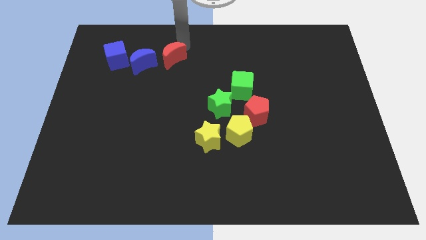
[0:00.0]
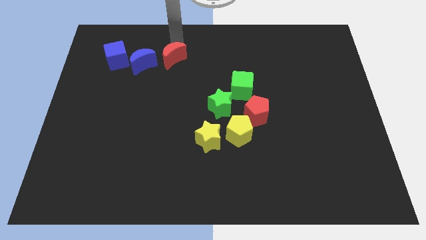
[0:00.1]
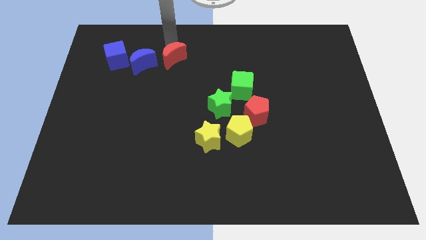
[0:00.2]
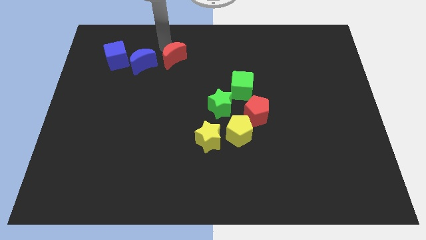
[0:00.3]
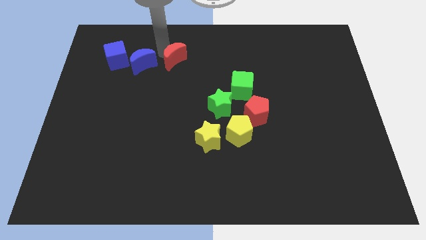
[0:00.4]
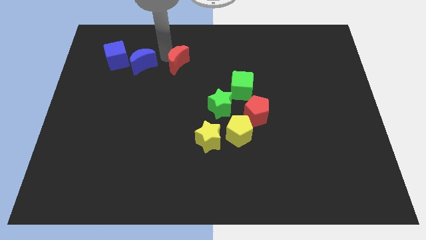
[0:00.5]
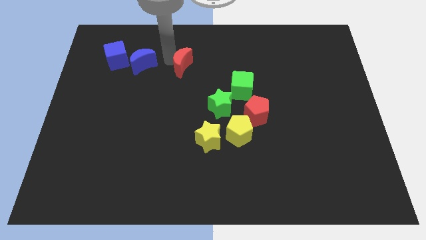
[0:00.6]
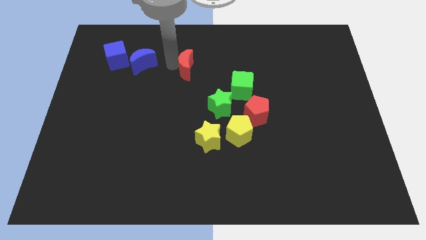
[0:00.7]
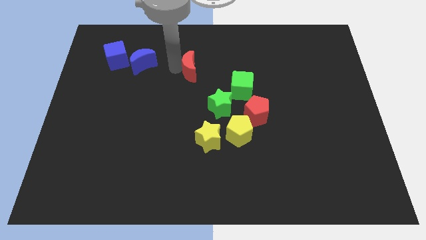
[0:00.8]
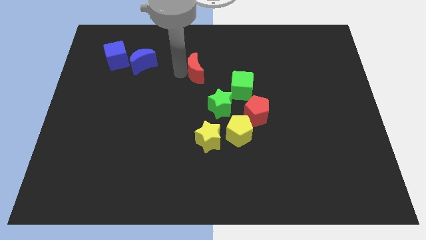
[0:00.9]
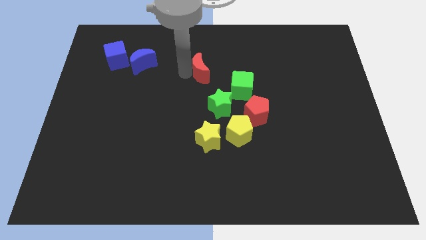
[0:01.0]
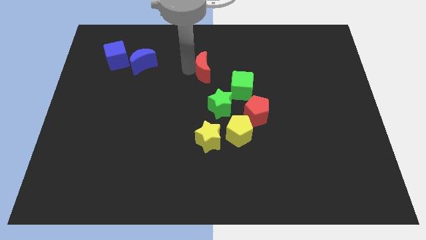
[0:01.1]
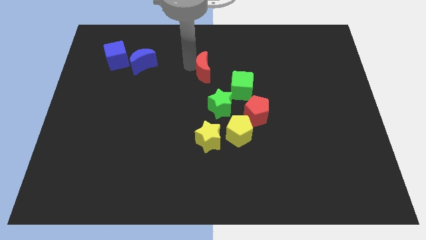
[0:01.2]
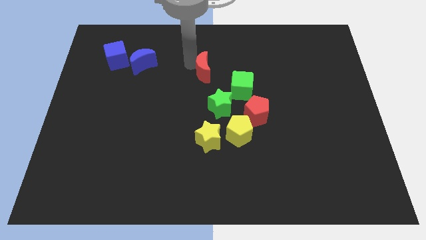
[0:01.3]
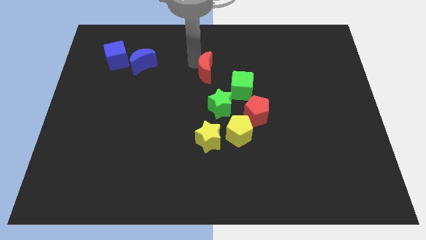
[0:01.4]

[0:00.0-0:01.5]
push the red crescent towards the green cube

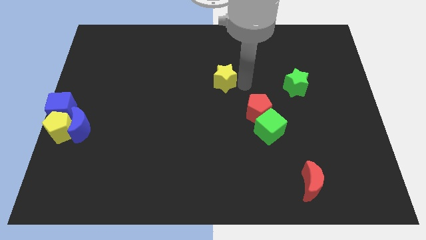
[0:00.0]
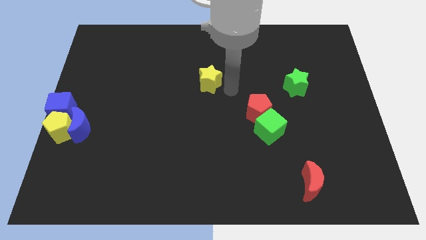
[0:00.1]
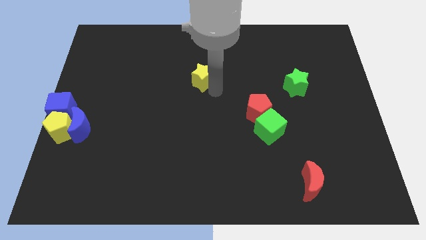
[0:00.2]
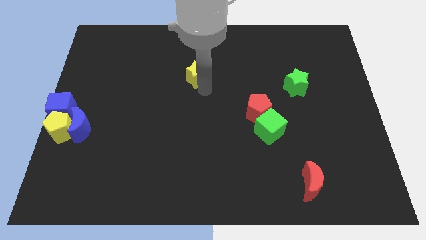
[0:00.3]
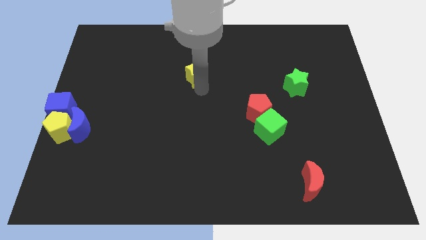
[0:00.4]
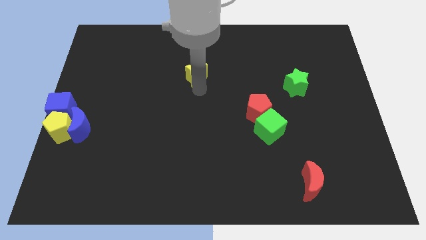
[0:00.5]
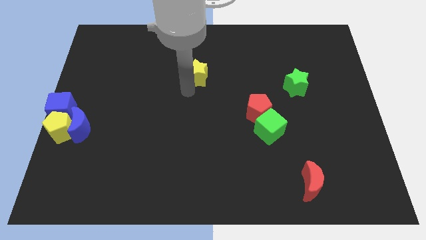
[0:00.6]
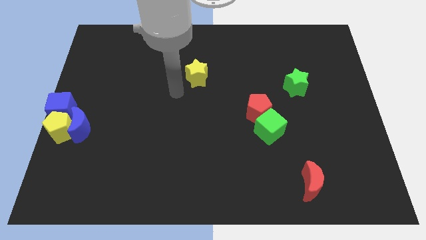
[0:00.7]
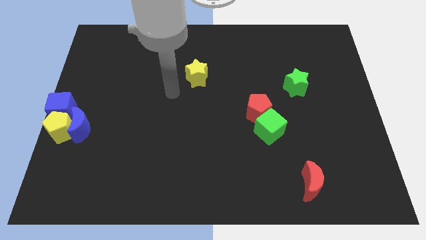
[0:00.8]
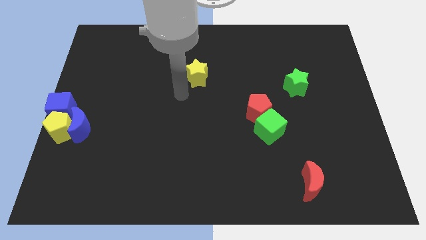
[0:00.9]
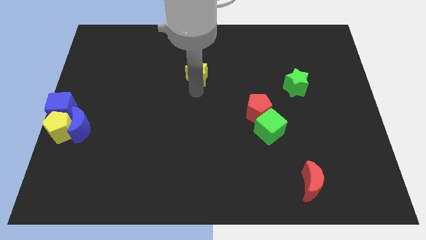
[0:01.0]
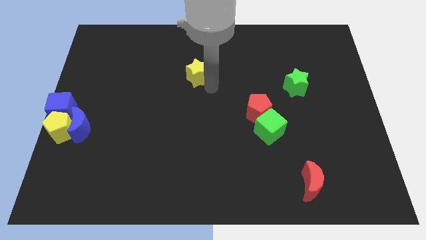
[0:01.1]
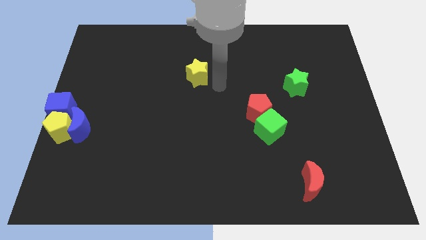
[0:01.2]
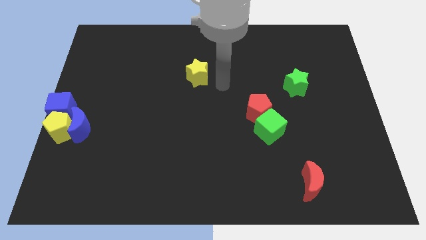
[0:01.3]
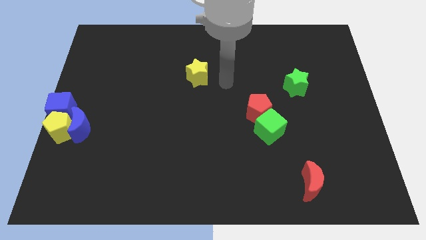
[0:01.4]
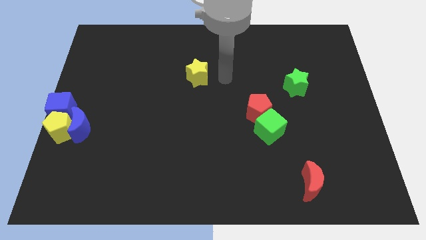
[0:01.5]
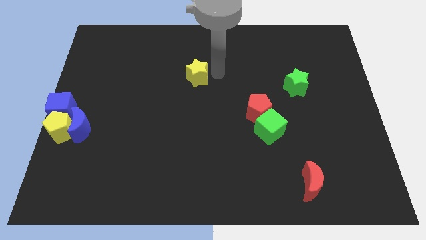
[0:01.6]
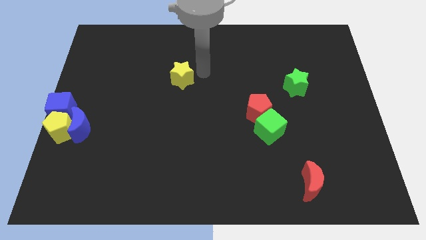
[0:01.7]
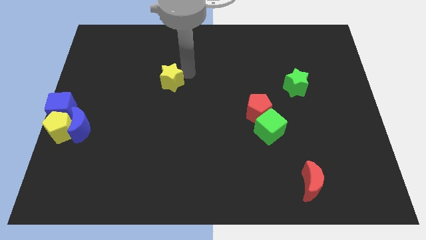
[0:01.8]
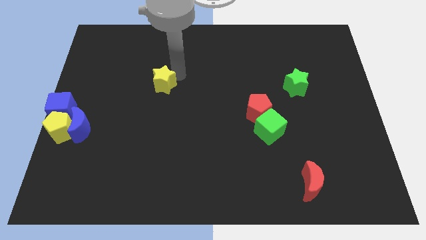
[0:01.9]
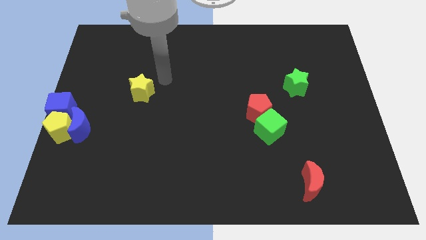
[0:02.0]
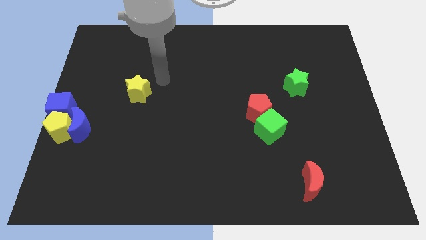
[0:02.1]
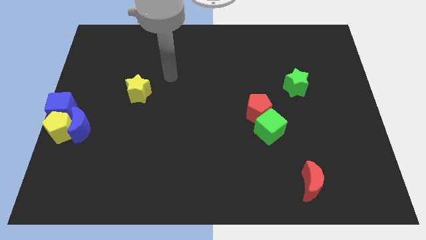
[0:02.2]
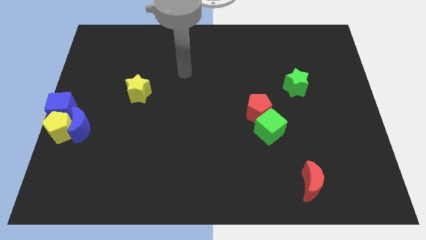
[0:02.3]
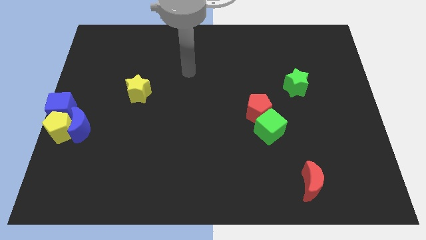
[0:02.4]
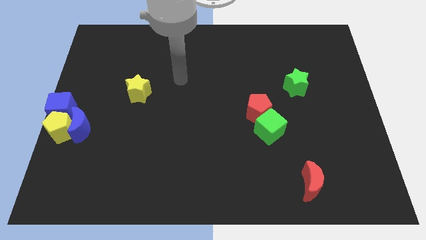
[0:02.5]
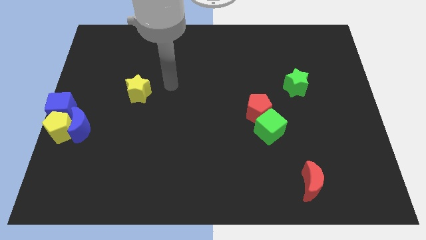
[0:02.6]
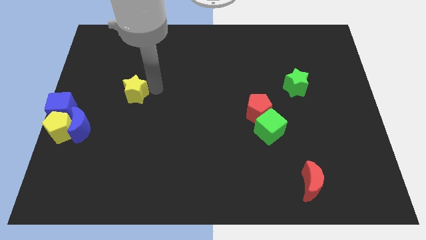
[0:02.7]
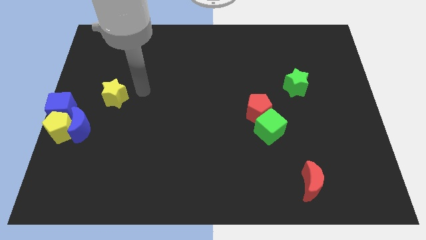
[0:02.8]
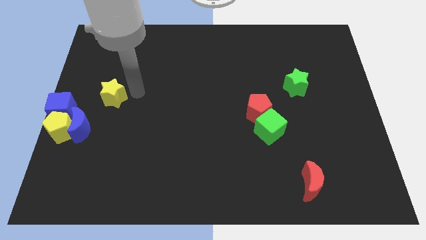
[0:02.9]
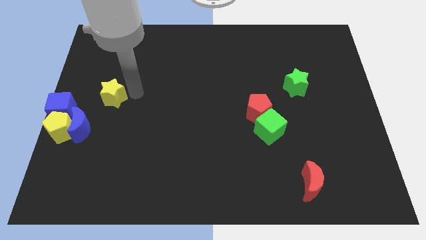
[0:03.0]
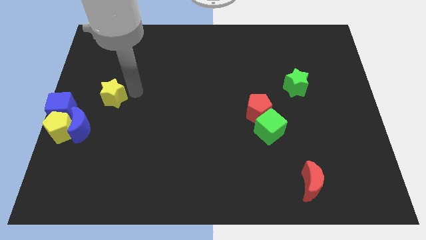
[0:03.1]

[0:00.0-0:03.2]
move the yellow star slightly towards the blue cube

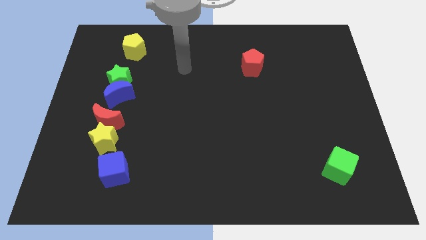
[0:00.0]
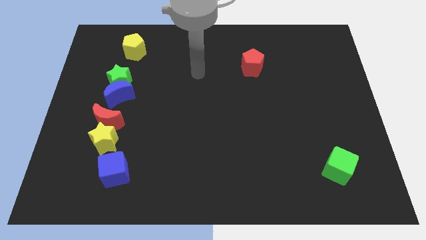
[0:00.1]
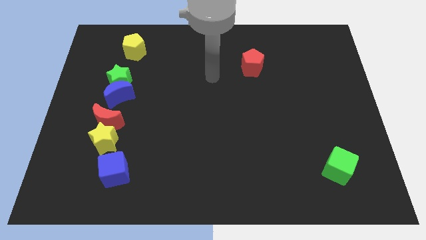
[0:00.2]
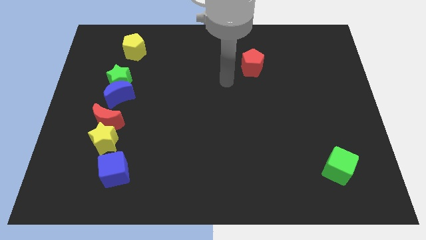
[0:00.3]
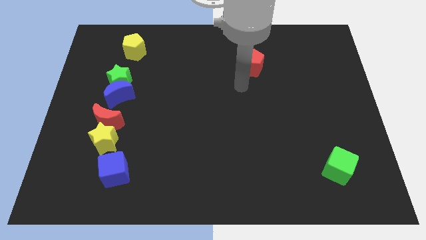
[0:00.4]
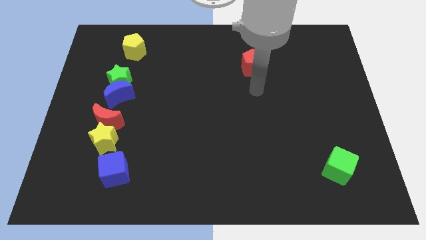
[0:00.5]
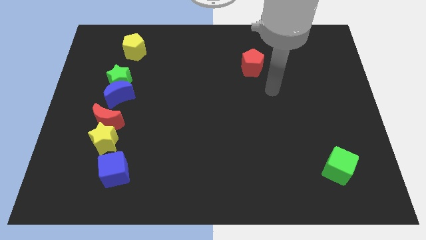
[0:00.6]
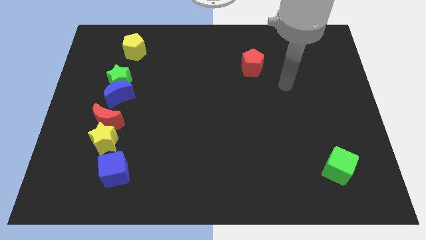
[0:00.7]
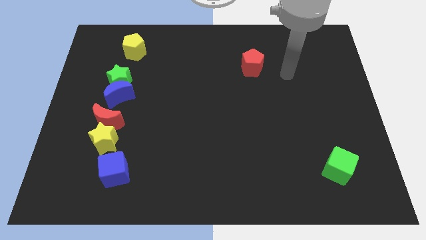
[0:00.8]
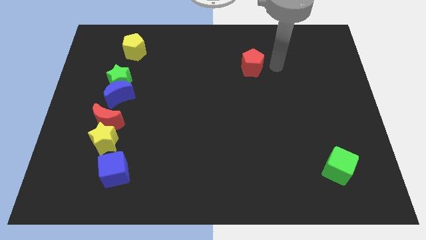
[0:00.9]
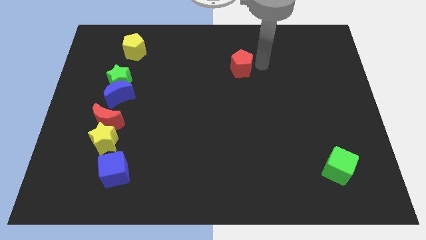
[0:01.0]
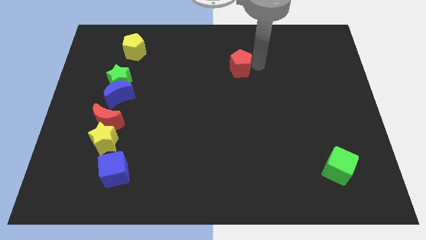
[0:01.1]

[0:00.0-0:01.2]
point your arm at the right side of the red pentagon

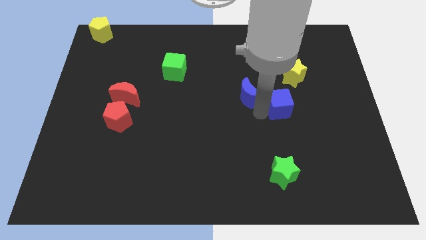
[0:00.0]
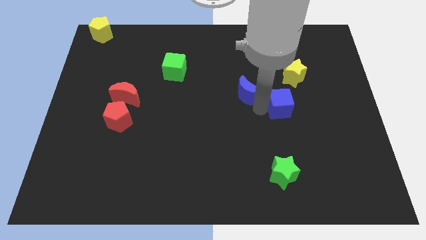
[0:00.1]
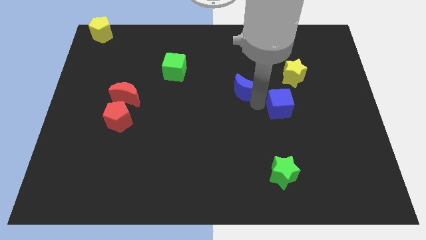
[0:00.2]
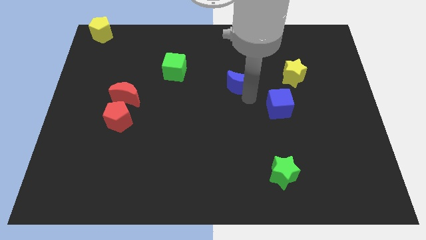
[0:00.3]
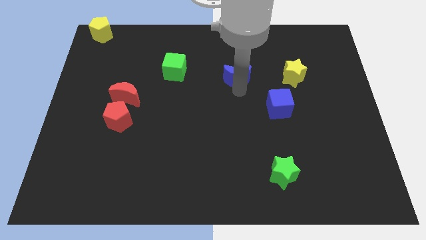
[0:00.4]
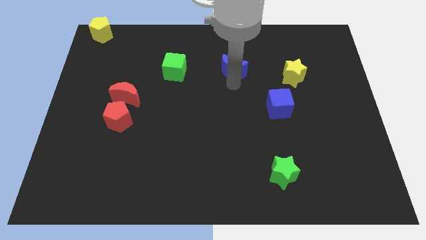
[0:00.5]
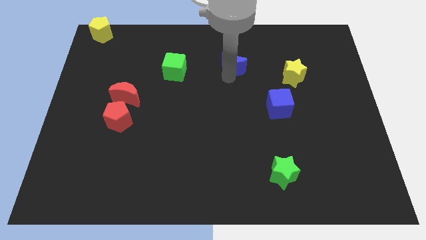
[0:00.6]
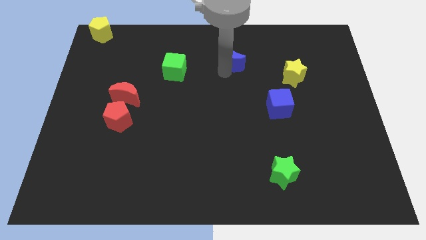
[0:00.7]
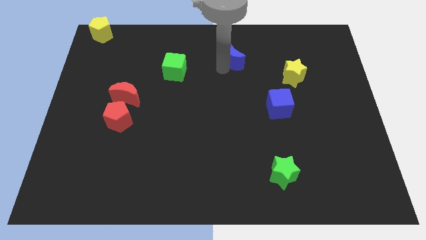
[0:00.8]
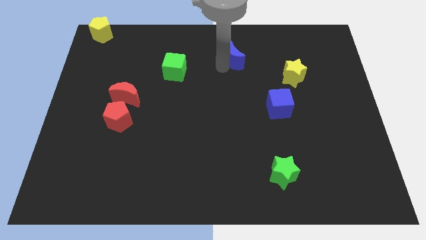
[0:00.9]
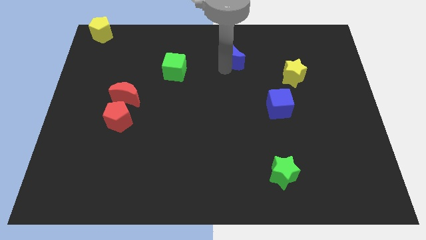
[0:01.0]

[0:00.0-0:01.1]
separate blue moon from blue cube

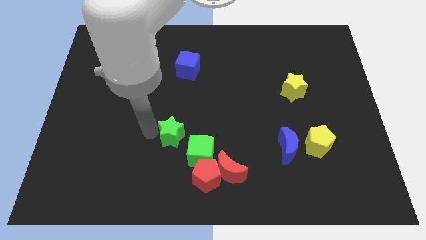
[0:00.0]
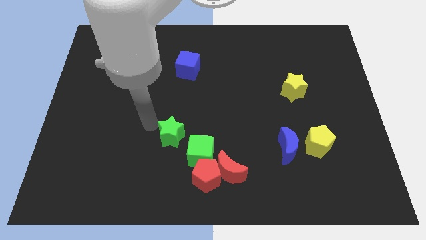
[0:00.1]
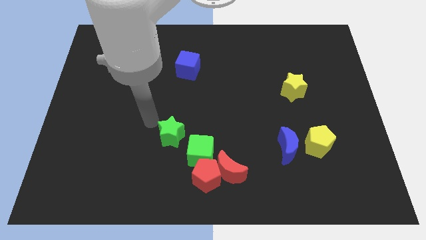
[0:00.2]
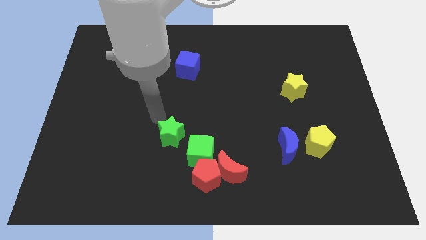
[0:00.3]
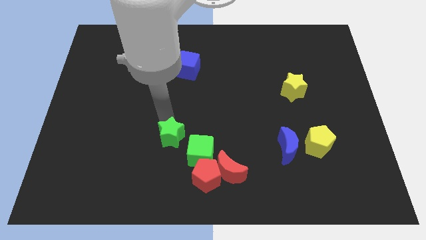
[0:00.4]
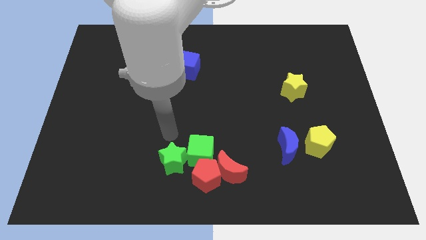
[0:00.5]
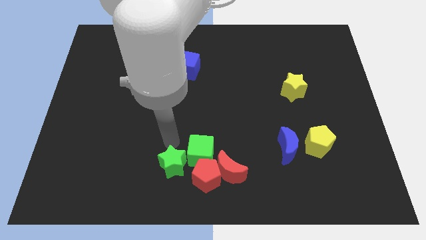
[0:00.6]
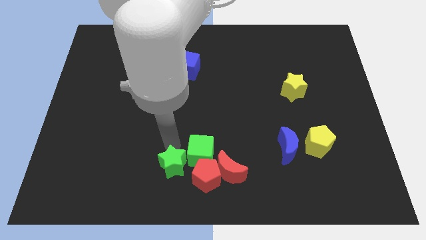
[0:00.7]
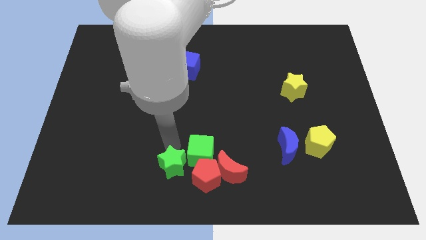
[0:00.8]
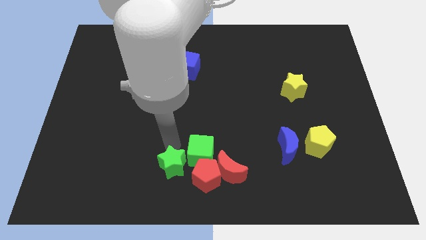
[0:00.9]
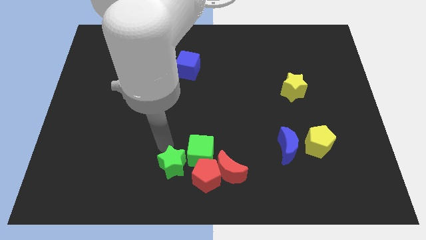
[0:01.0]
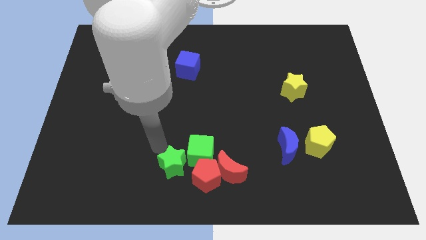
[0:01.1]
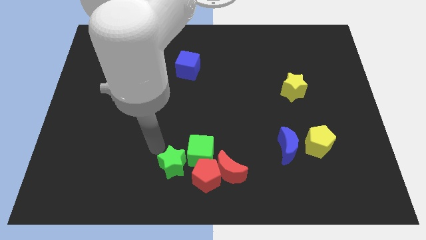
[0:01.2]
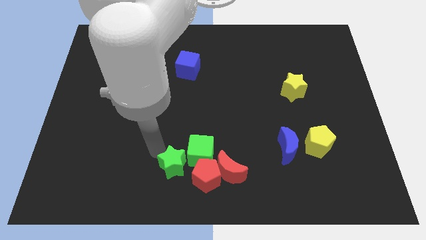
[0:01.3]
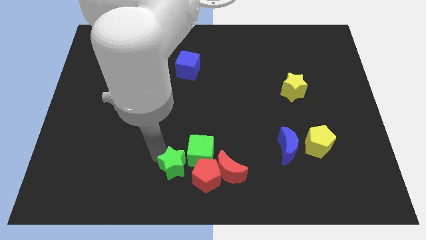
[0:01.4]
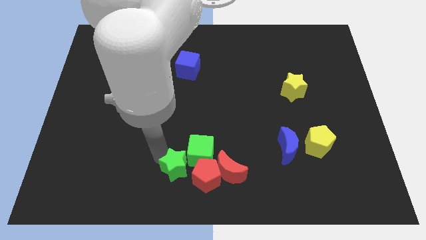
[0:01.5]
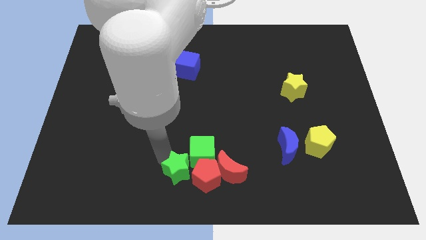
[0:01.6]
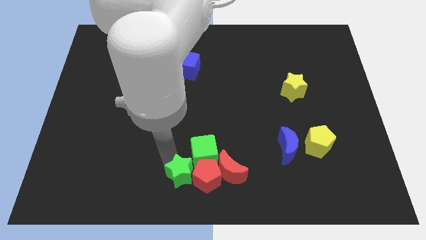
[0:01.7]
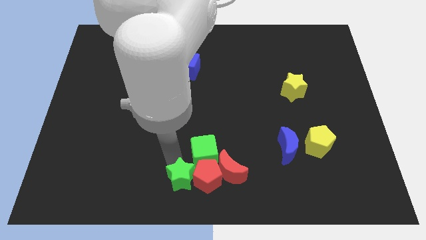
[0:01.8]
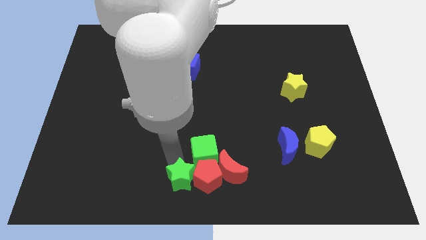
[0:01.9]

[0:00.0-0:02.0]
make a group of green and red blocks
